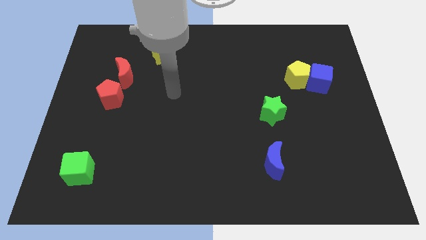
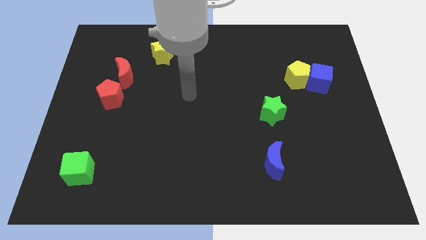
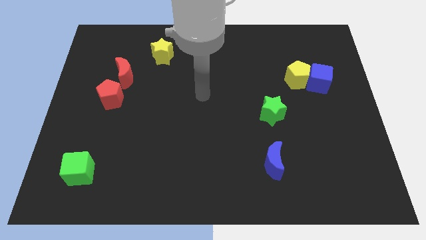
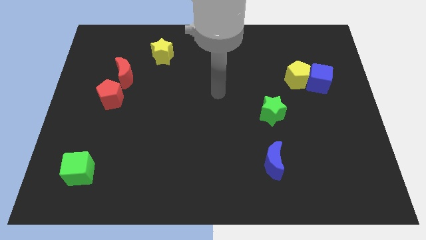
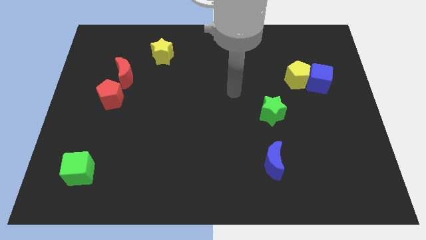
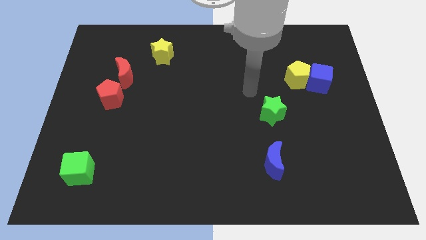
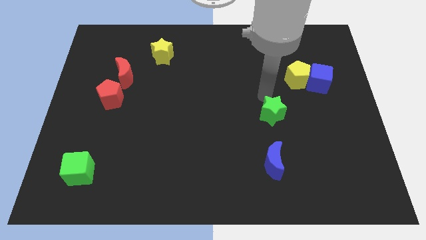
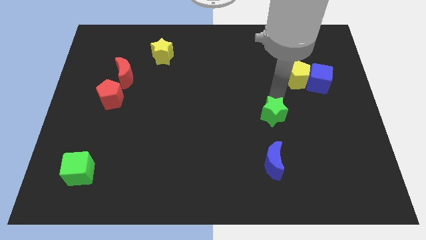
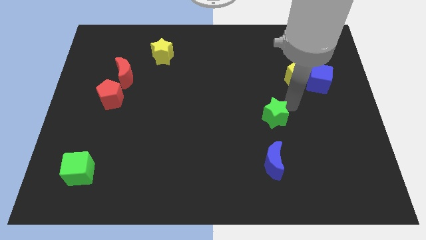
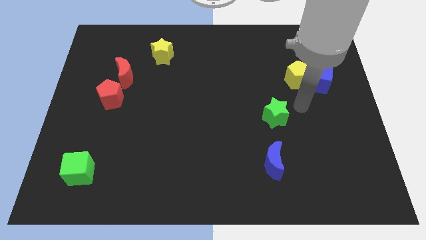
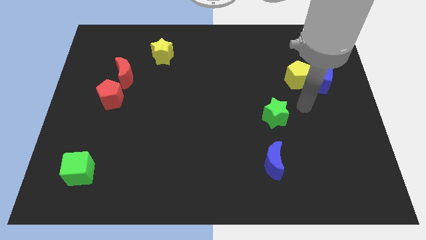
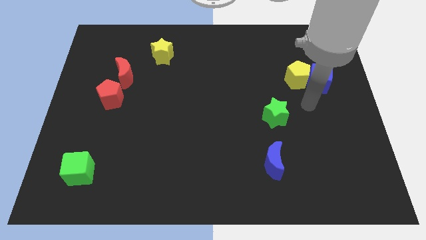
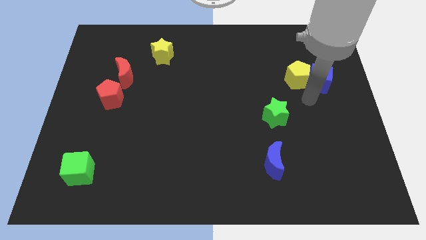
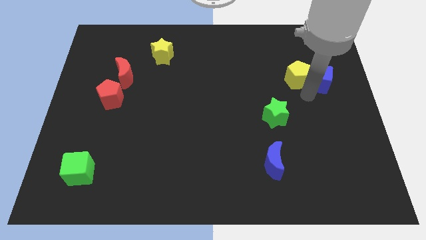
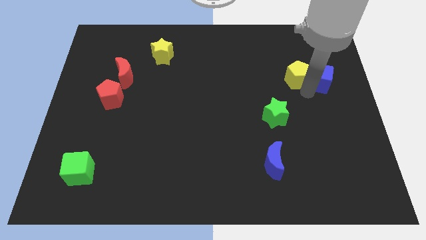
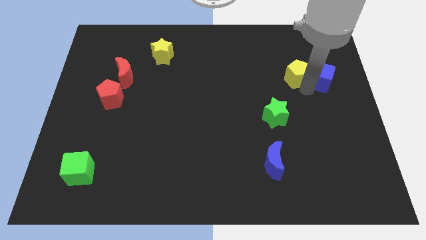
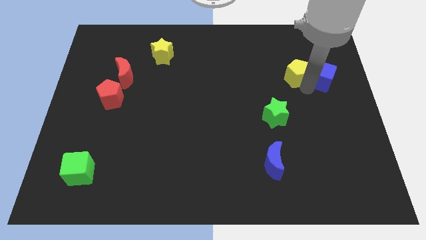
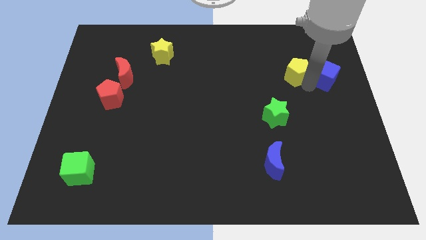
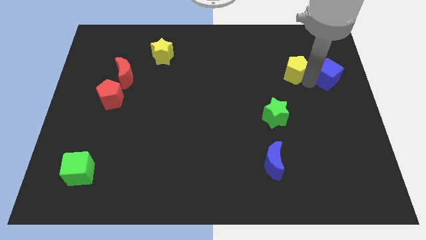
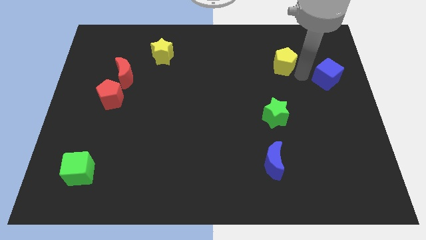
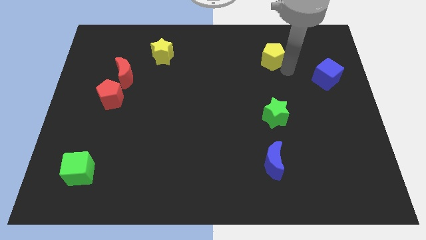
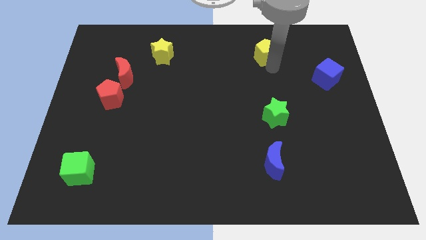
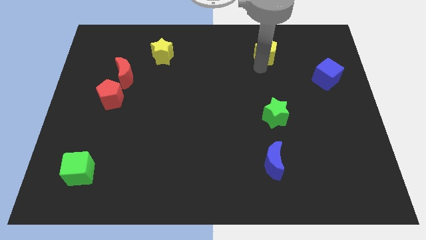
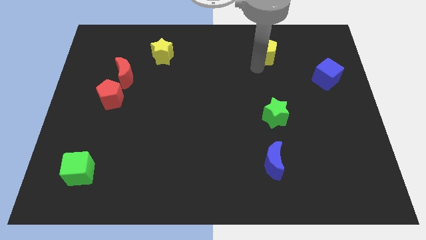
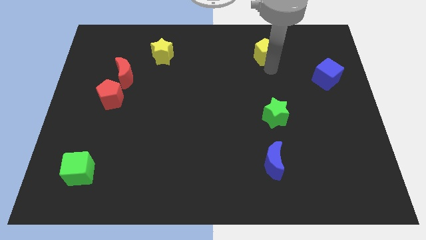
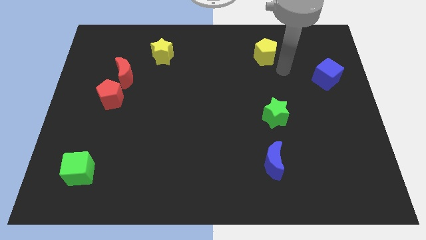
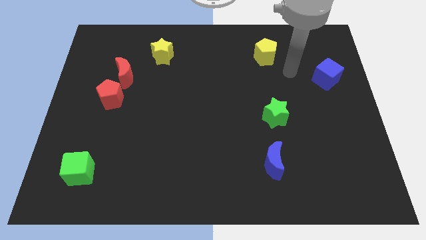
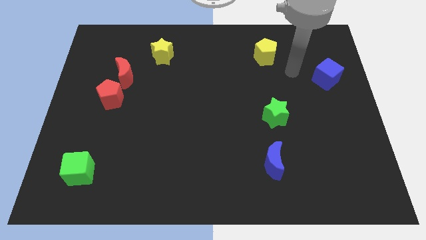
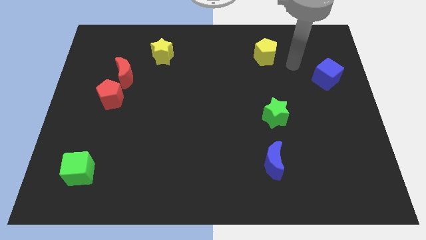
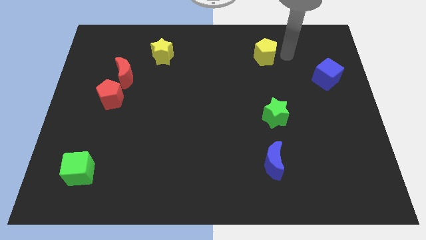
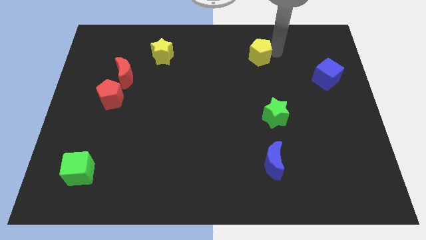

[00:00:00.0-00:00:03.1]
separate yellow pentagon from blue cube

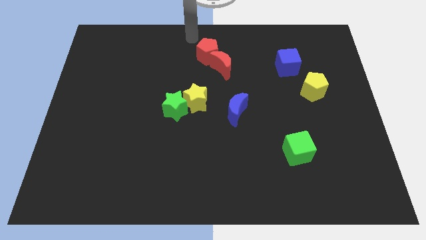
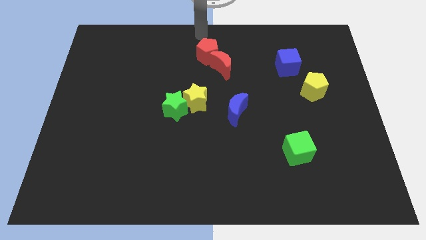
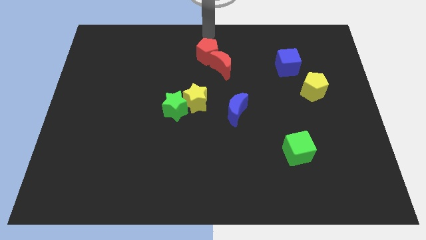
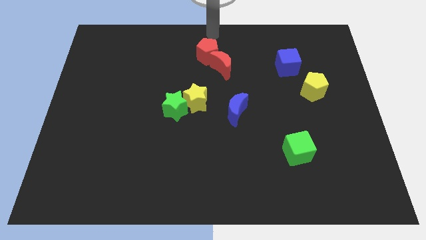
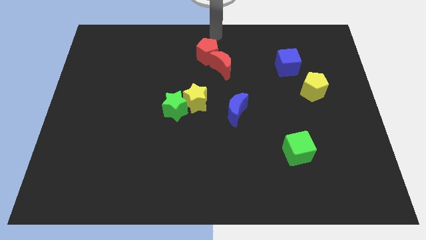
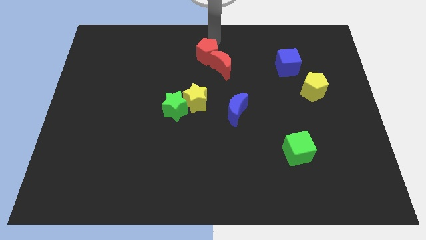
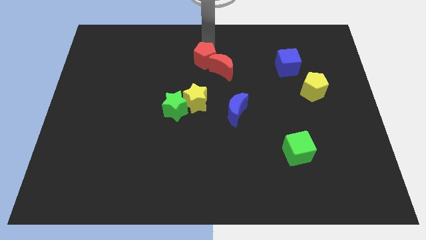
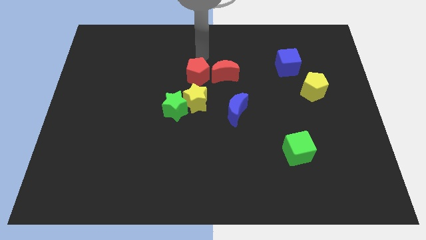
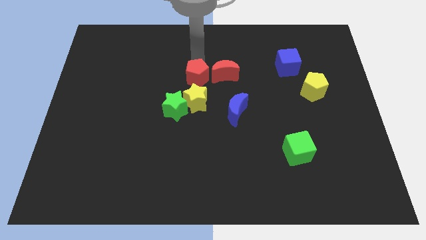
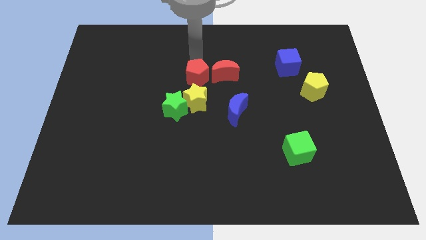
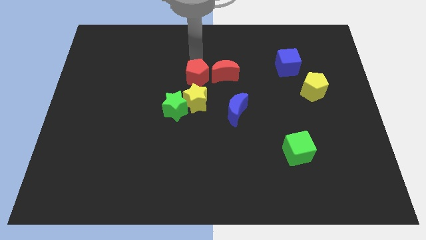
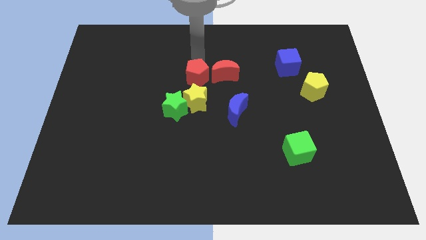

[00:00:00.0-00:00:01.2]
slide both the red blocks parallel to each other

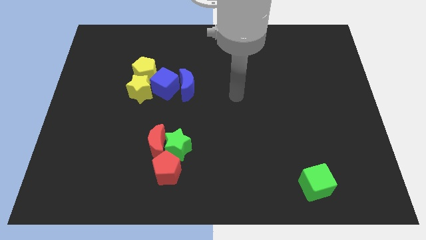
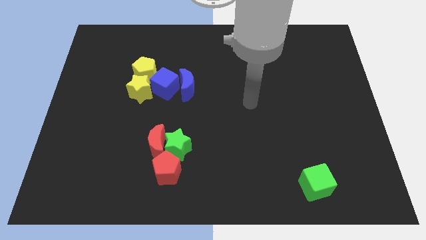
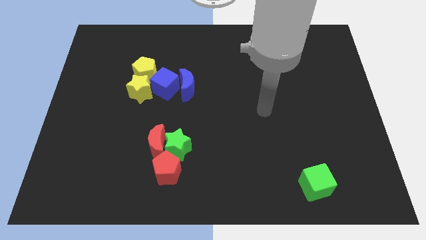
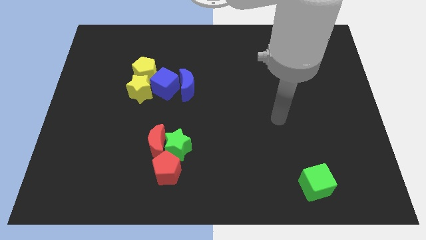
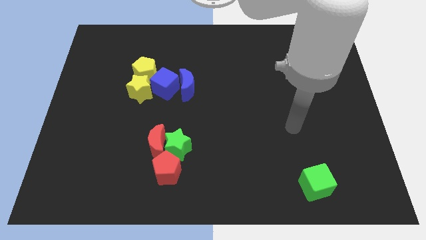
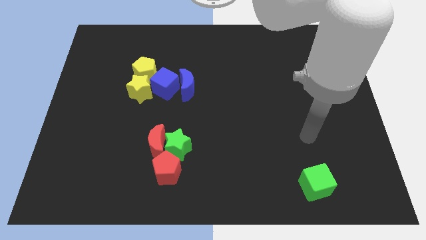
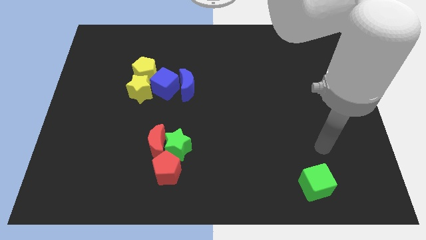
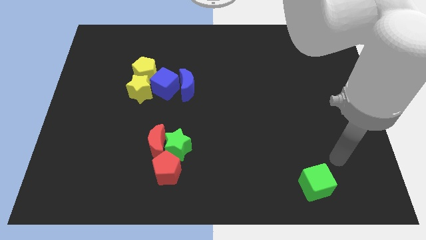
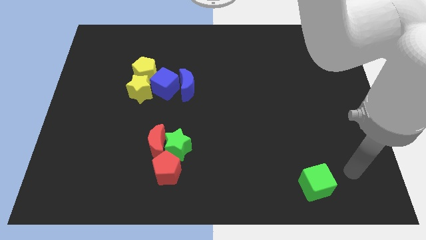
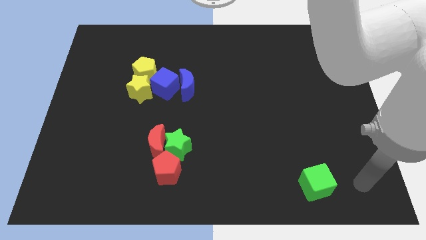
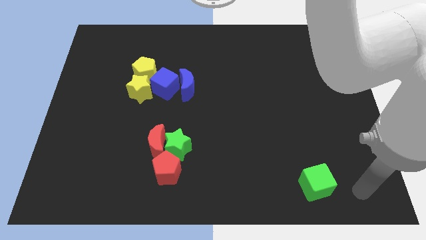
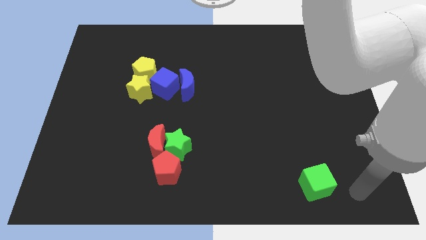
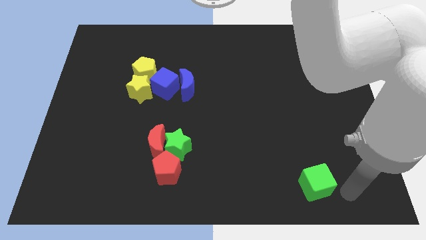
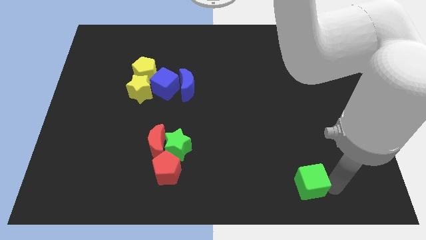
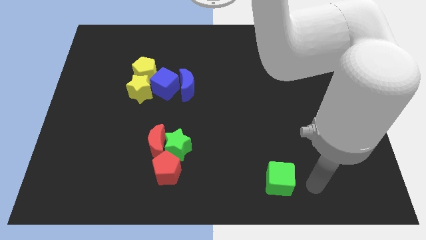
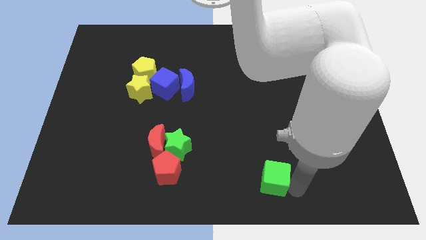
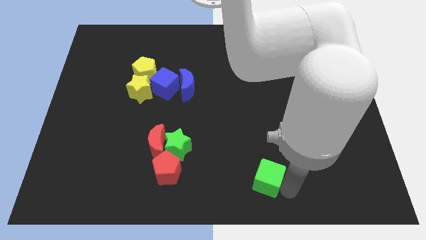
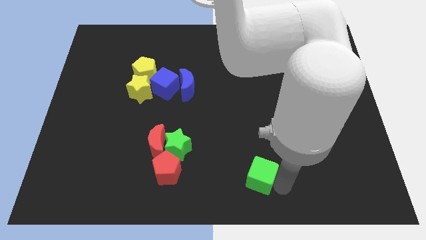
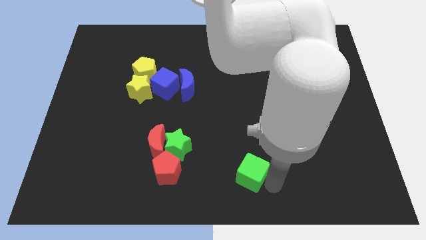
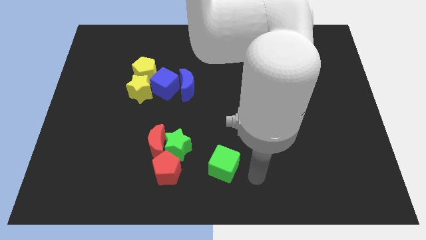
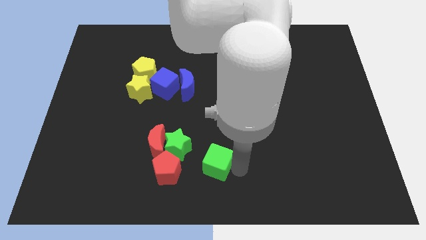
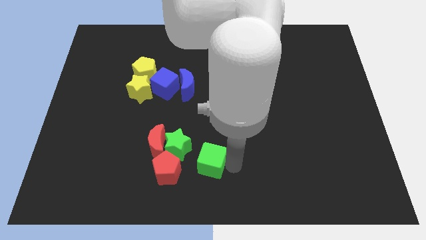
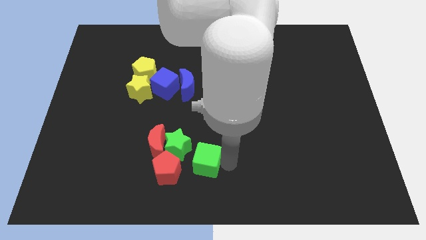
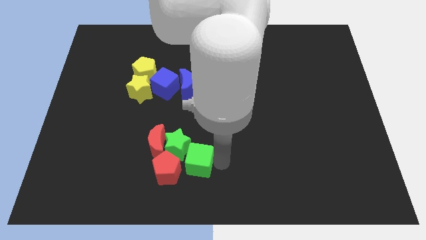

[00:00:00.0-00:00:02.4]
push the green cube towards green star

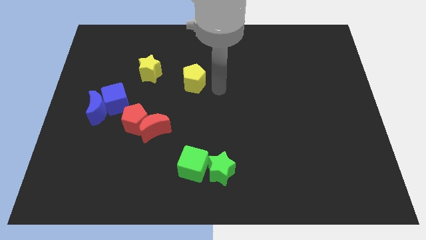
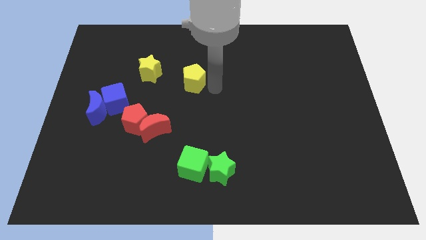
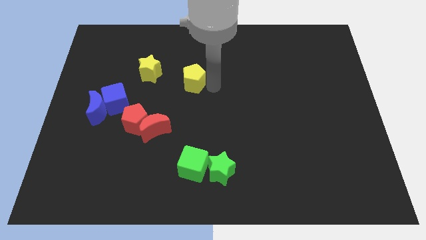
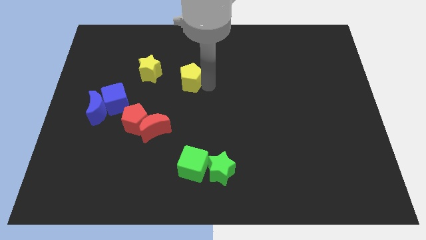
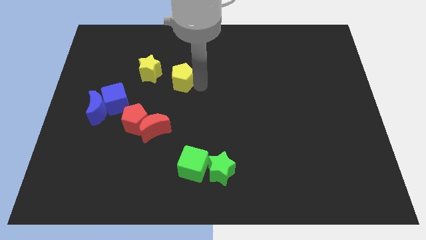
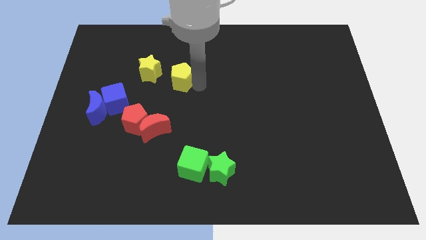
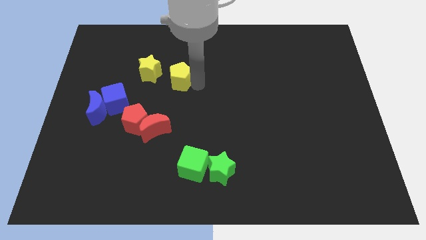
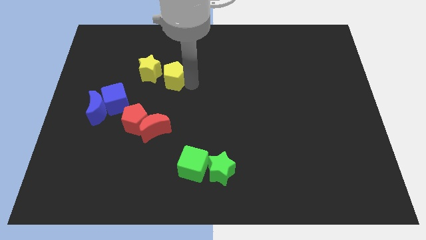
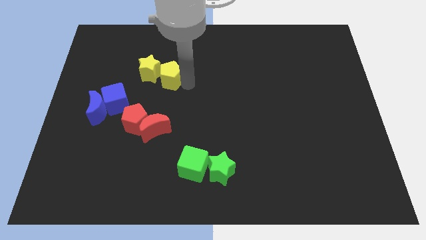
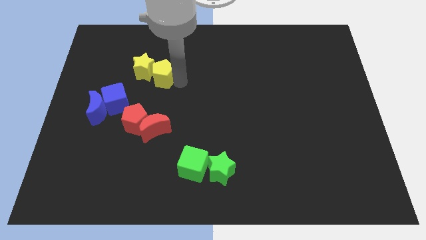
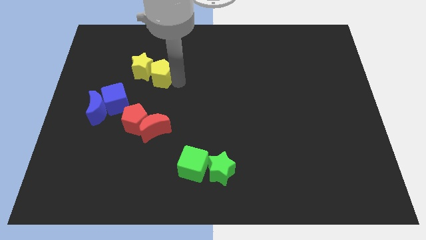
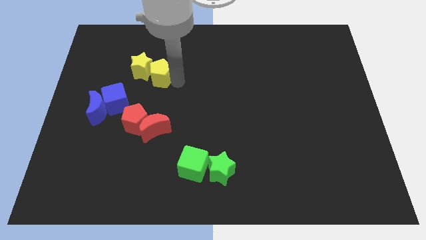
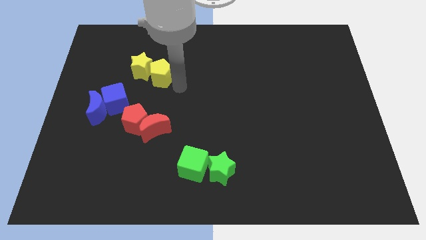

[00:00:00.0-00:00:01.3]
move the yellow pentagon into the yellow star

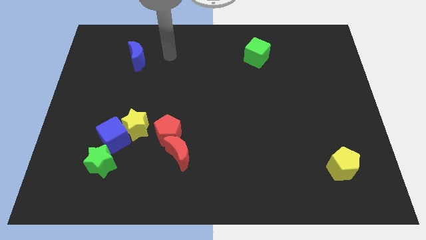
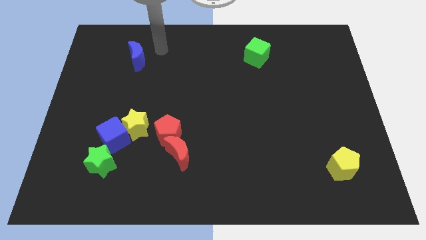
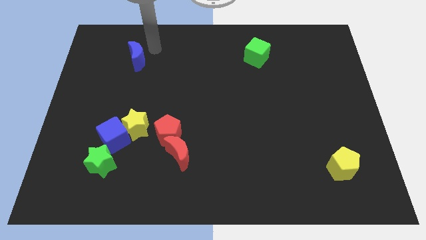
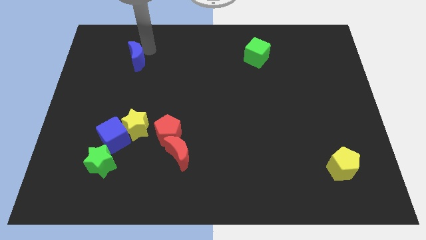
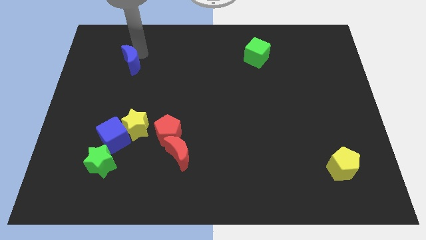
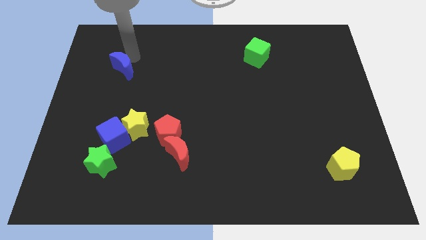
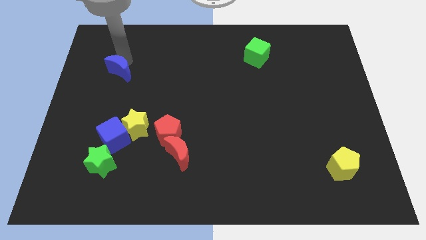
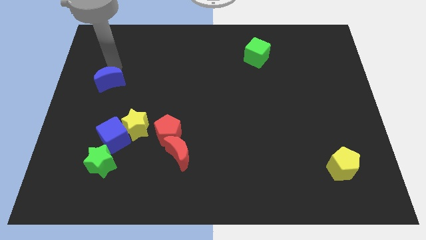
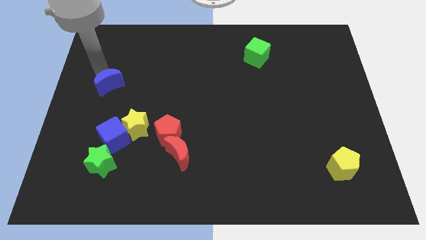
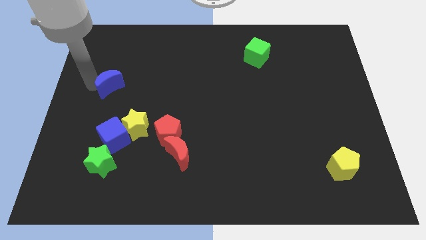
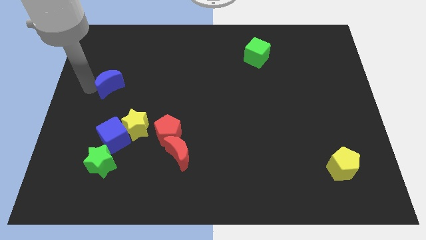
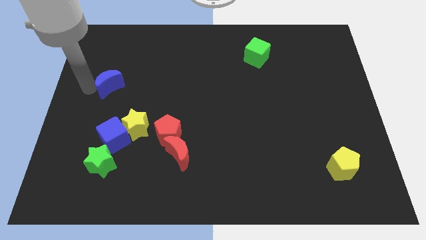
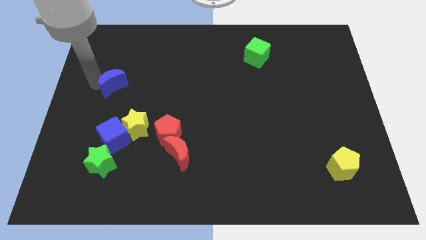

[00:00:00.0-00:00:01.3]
move the blue moon to the left center of the board
